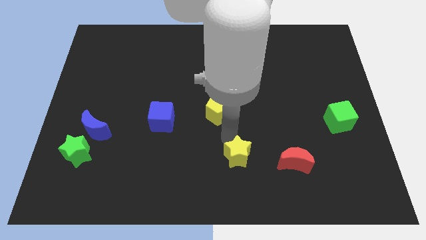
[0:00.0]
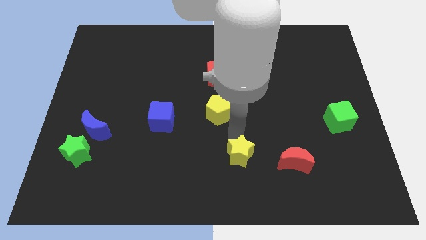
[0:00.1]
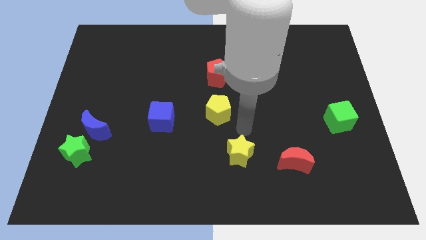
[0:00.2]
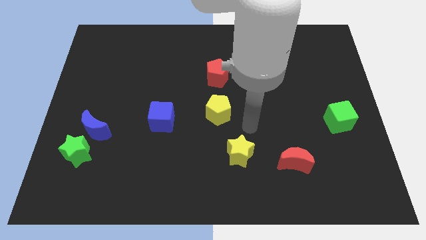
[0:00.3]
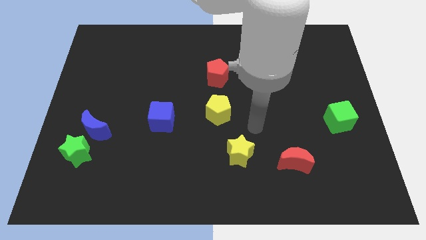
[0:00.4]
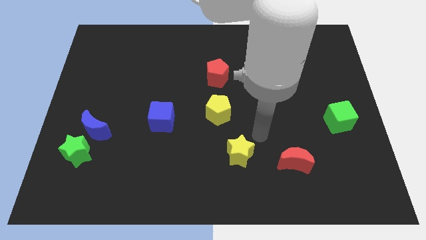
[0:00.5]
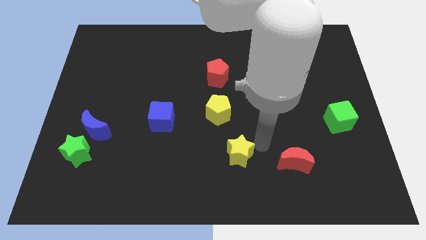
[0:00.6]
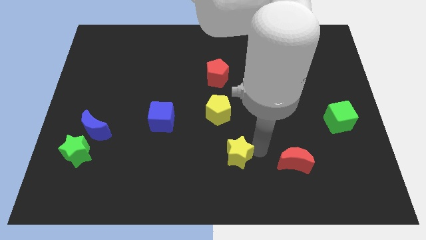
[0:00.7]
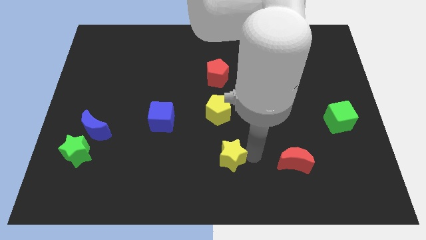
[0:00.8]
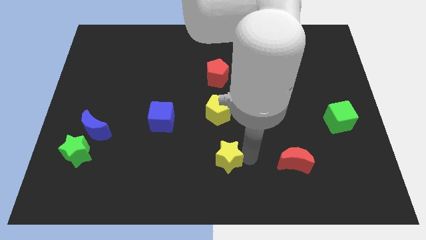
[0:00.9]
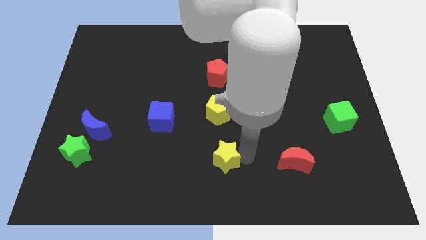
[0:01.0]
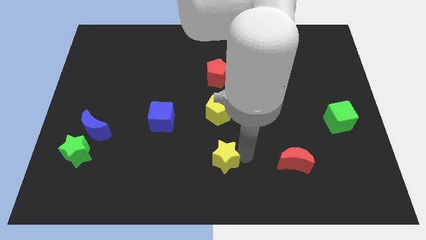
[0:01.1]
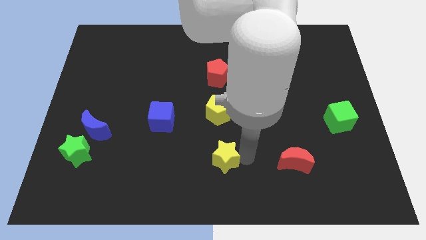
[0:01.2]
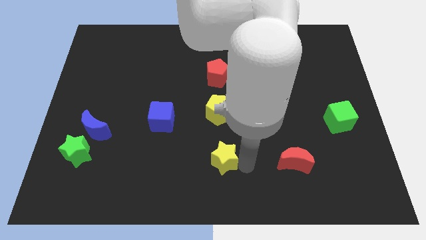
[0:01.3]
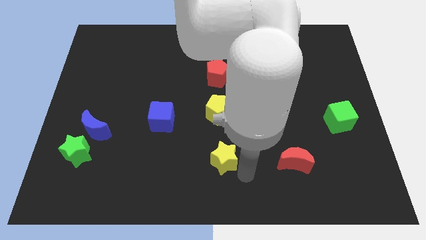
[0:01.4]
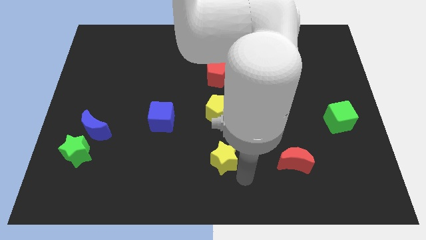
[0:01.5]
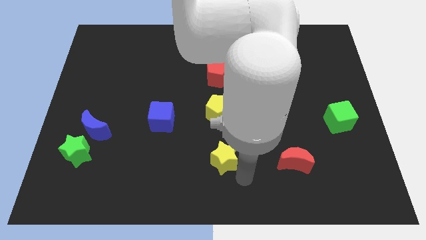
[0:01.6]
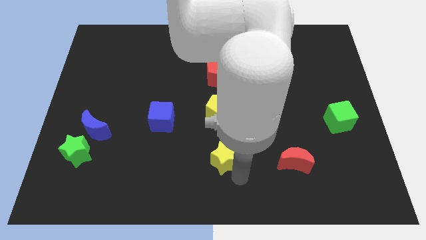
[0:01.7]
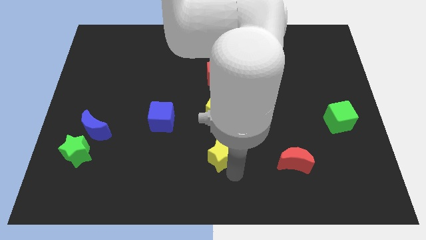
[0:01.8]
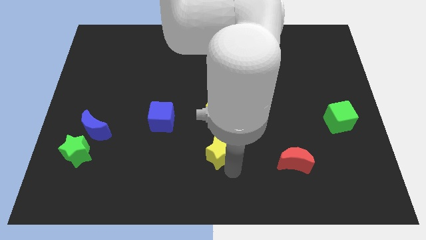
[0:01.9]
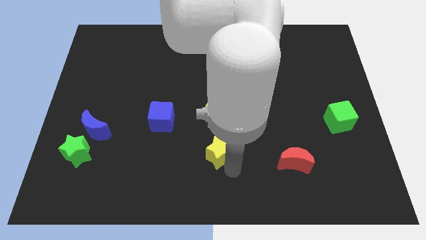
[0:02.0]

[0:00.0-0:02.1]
slide the yellow star underneath the yellow pentagon

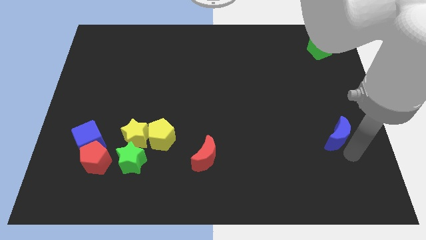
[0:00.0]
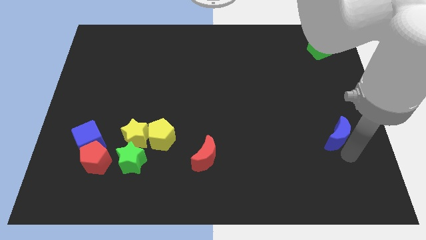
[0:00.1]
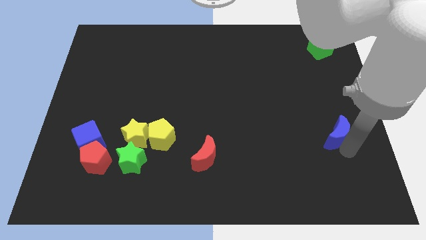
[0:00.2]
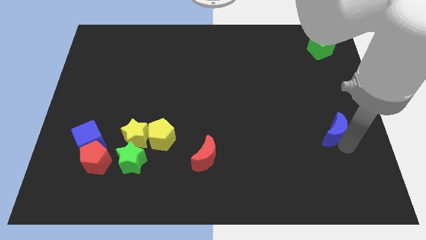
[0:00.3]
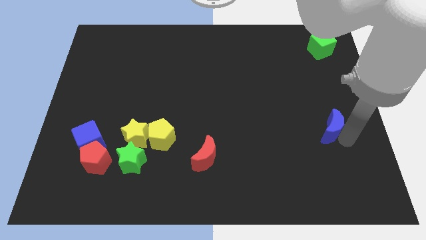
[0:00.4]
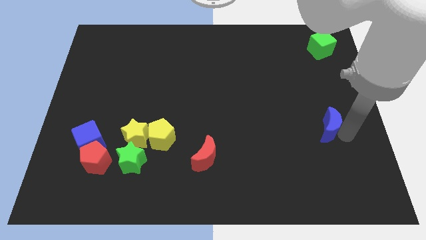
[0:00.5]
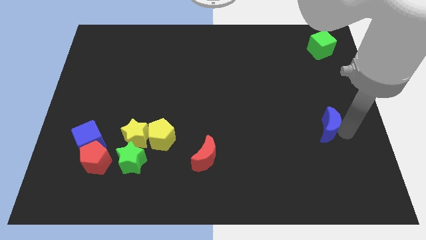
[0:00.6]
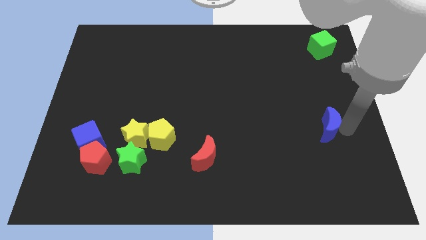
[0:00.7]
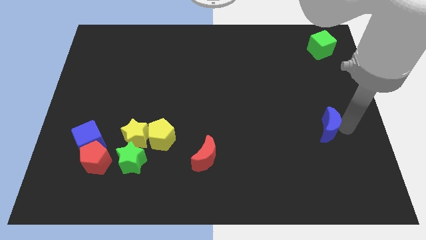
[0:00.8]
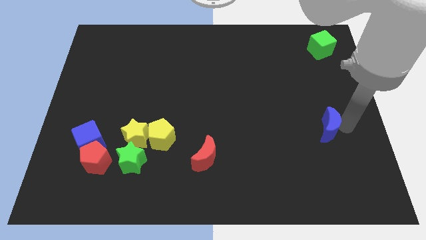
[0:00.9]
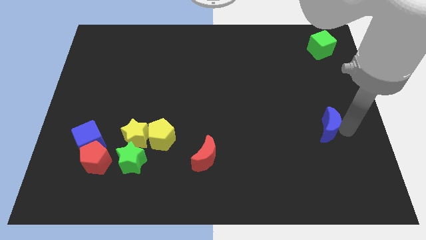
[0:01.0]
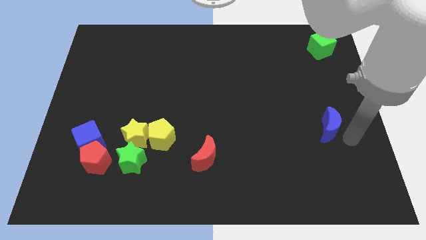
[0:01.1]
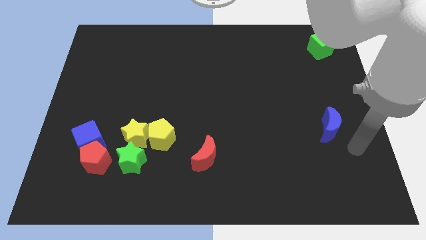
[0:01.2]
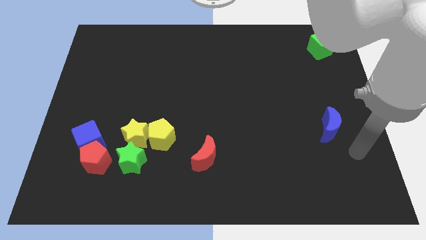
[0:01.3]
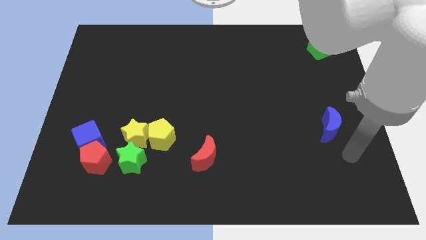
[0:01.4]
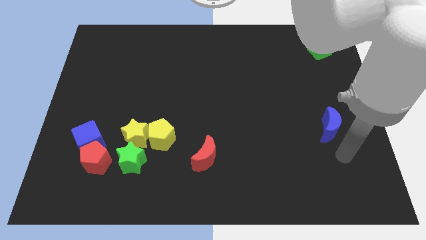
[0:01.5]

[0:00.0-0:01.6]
slightly push the blue crescent upwards of the board

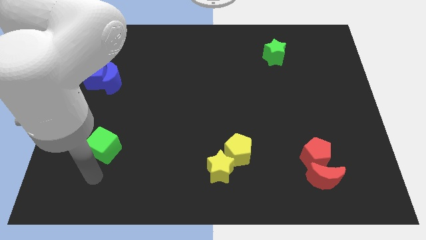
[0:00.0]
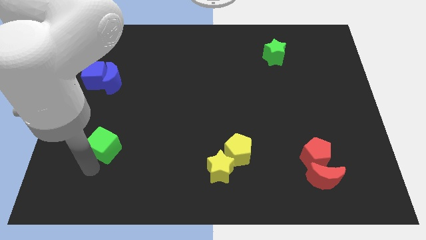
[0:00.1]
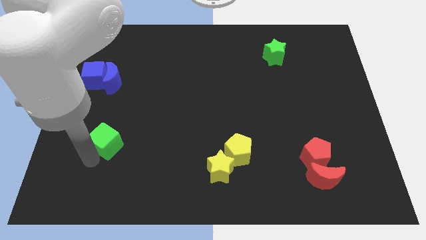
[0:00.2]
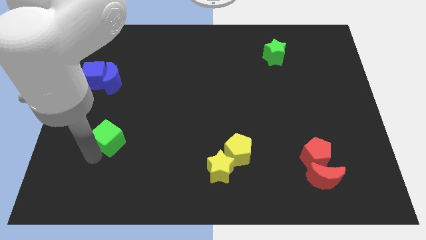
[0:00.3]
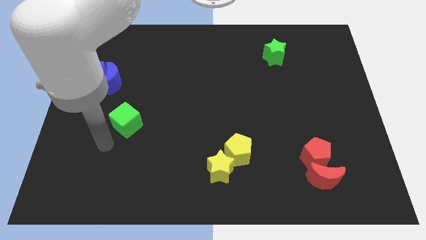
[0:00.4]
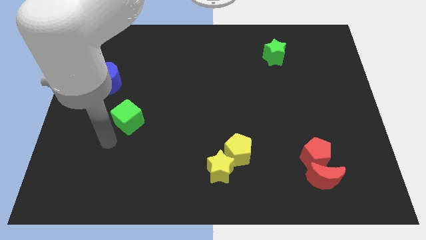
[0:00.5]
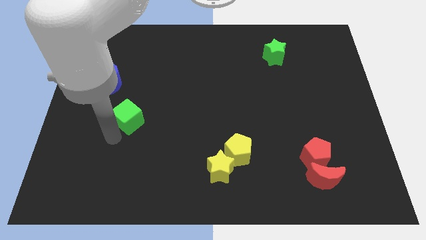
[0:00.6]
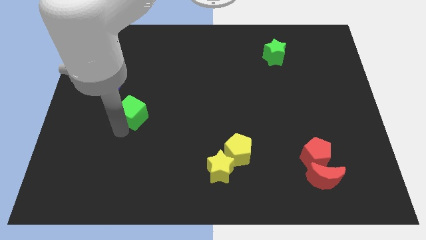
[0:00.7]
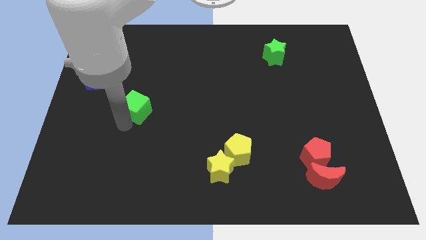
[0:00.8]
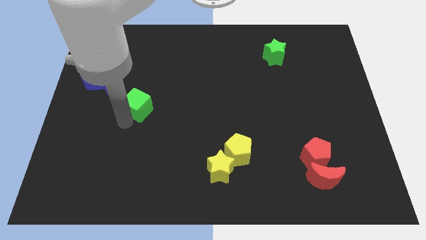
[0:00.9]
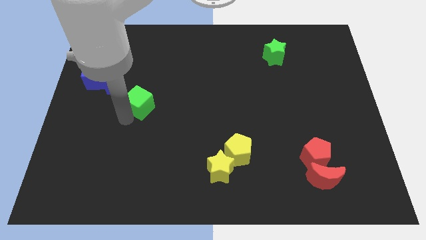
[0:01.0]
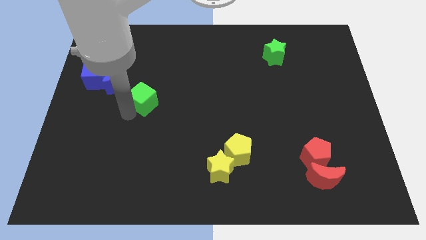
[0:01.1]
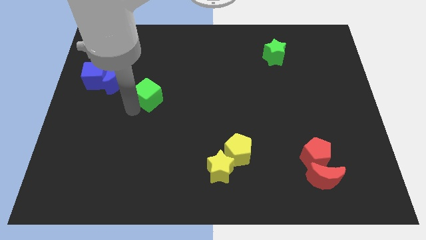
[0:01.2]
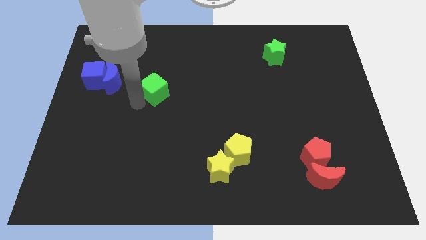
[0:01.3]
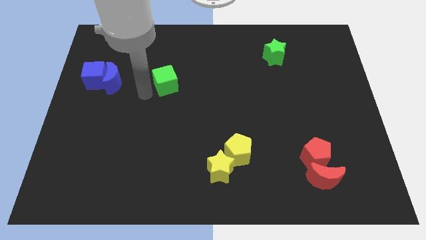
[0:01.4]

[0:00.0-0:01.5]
push the green cube to the right of the blue crescent

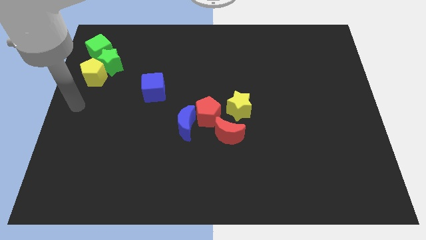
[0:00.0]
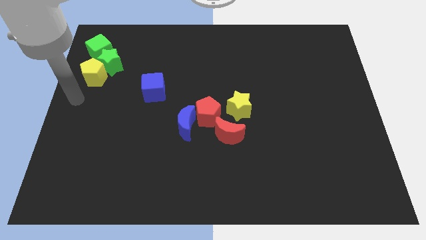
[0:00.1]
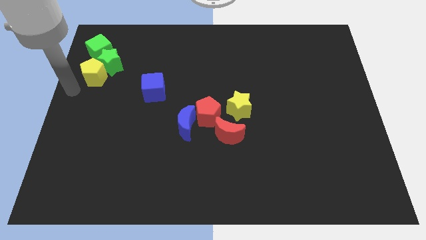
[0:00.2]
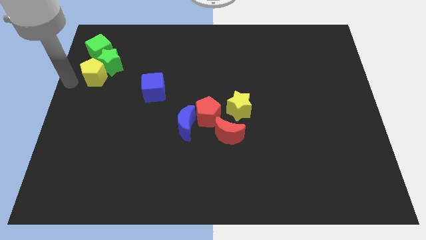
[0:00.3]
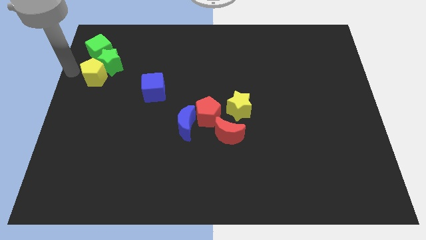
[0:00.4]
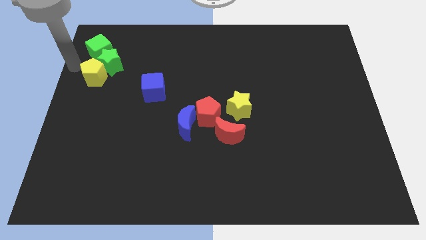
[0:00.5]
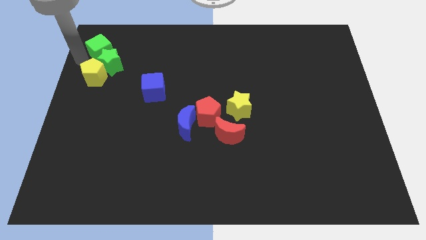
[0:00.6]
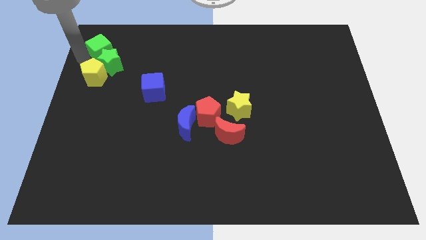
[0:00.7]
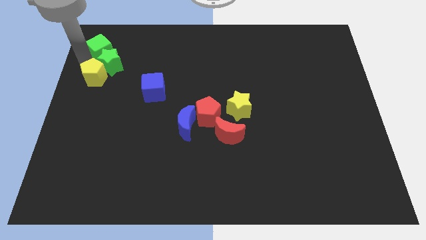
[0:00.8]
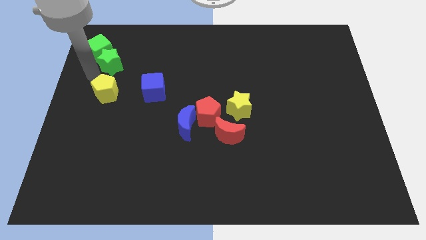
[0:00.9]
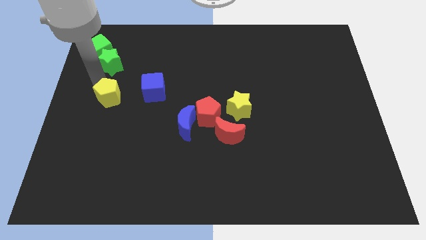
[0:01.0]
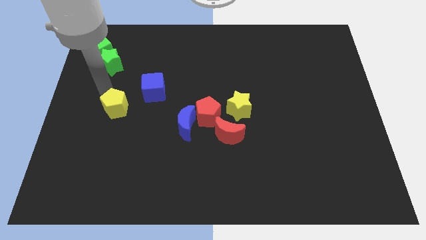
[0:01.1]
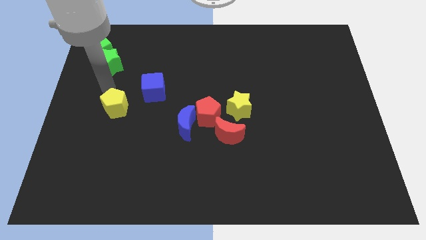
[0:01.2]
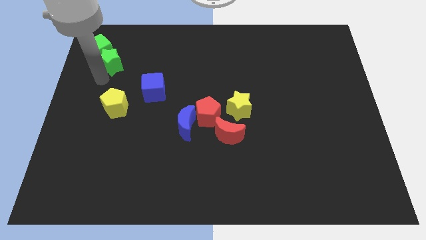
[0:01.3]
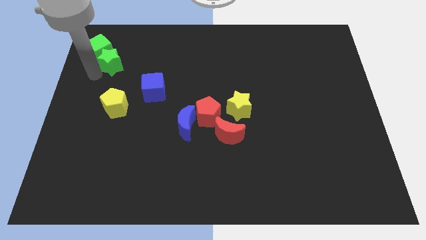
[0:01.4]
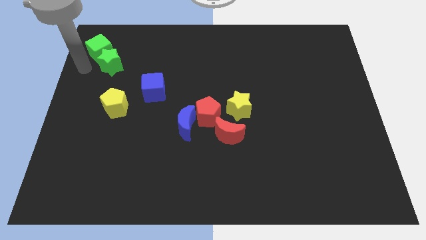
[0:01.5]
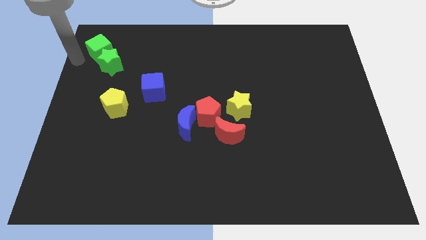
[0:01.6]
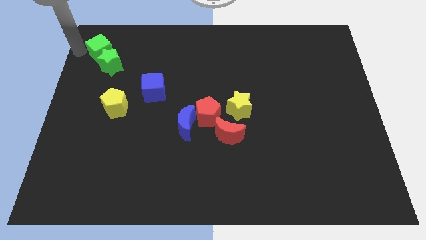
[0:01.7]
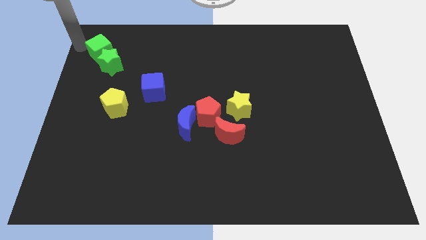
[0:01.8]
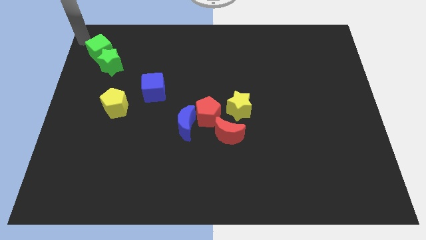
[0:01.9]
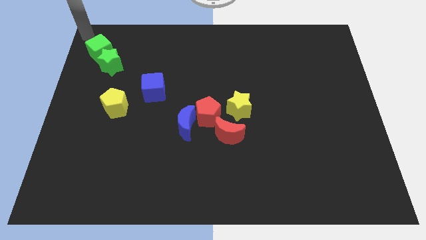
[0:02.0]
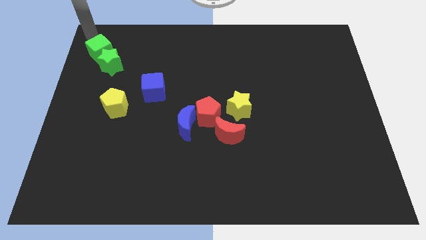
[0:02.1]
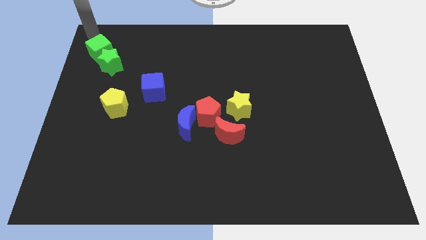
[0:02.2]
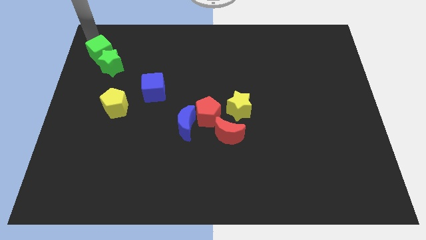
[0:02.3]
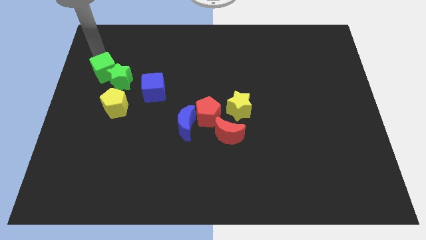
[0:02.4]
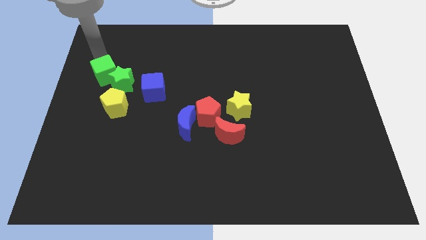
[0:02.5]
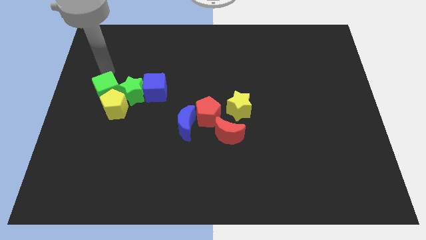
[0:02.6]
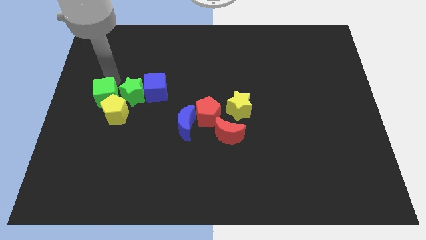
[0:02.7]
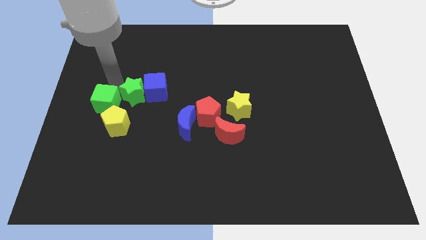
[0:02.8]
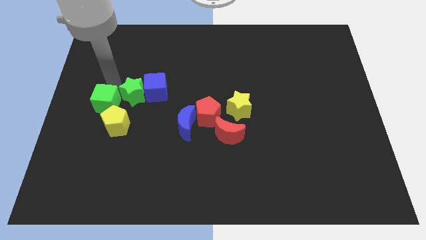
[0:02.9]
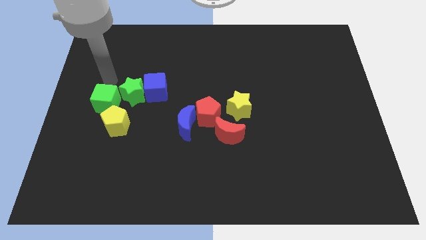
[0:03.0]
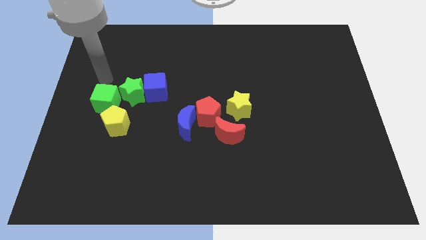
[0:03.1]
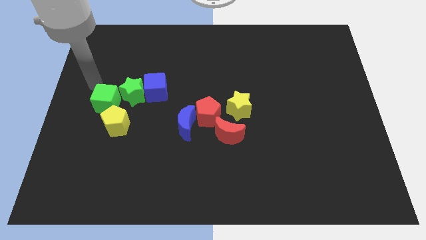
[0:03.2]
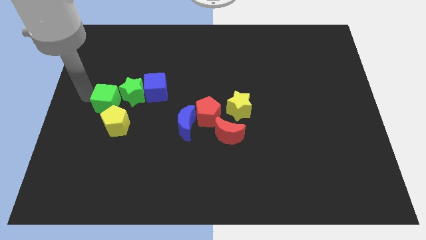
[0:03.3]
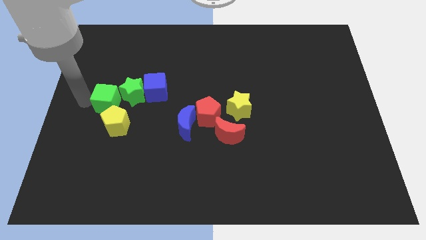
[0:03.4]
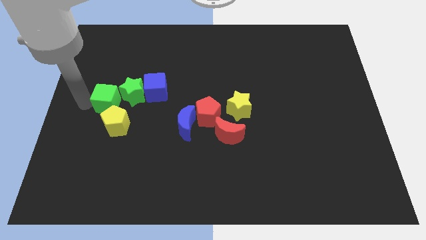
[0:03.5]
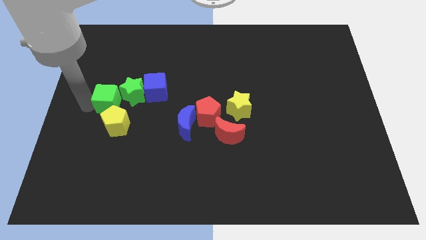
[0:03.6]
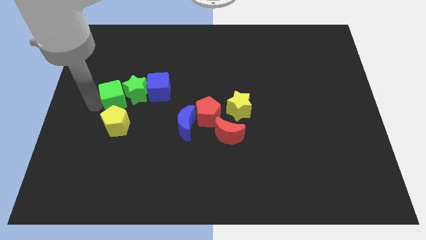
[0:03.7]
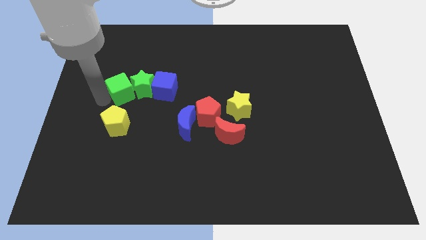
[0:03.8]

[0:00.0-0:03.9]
arrange blue cube green star and green cube in a horizontal line
